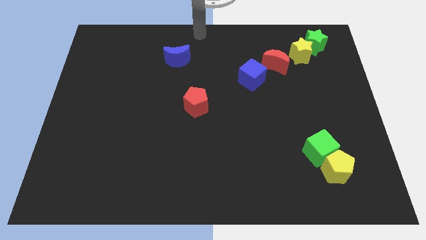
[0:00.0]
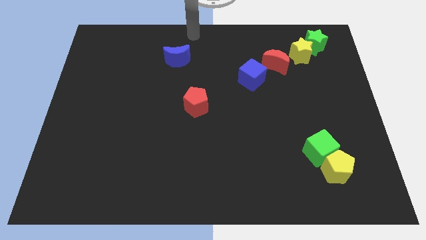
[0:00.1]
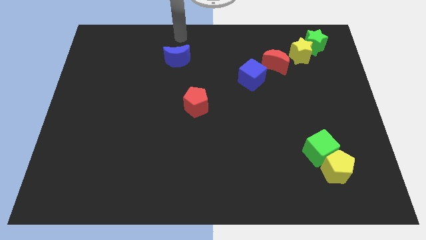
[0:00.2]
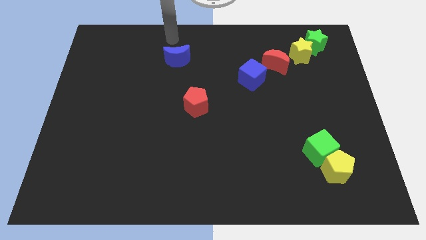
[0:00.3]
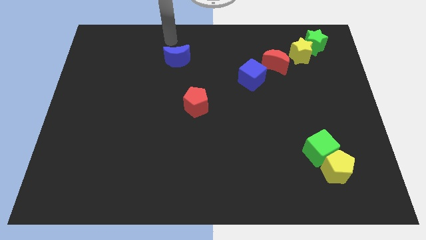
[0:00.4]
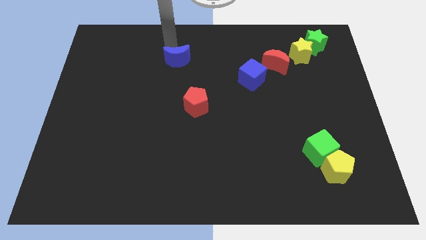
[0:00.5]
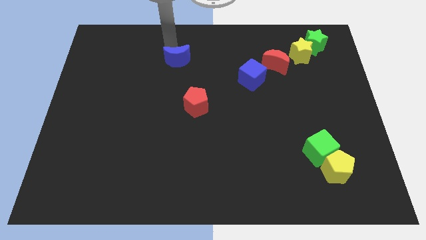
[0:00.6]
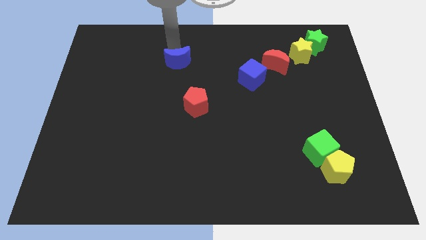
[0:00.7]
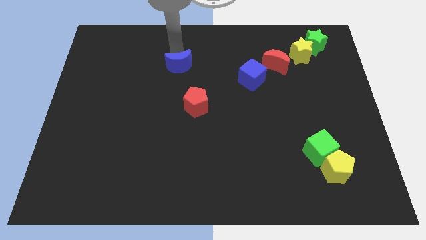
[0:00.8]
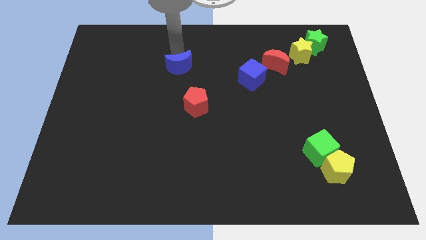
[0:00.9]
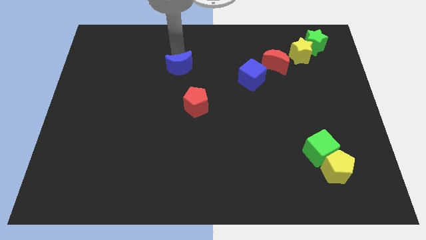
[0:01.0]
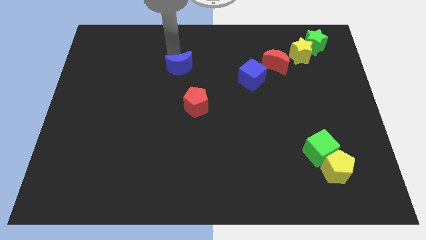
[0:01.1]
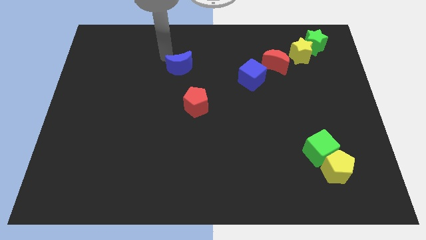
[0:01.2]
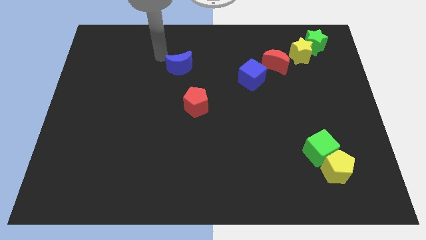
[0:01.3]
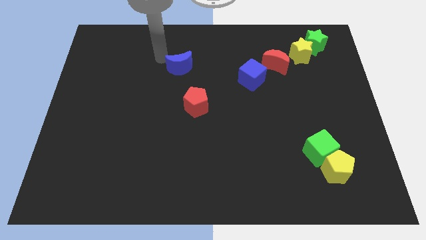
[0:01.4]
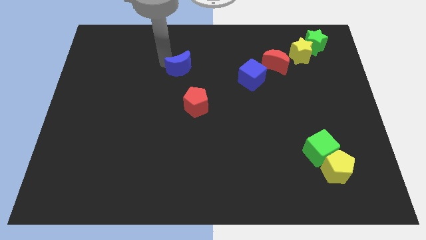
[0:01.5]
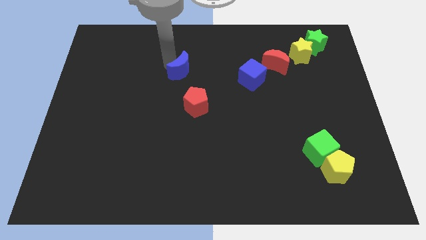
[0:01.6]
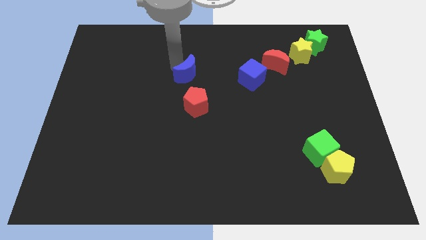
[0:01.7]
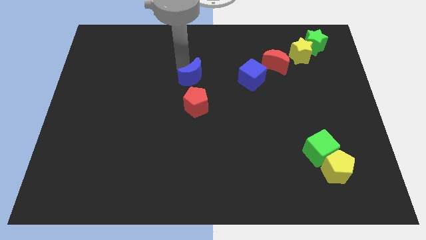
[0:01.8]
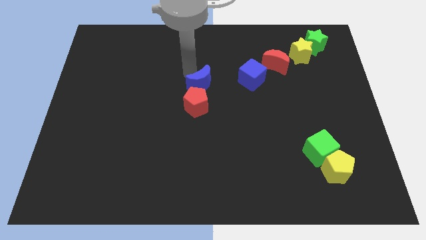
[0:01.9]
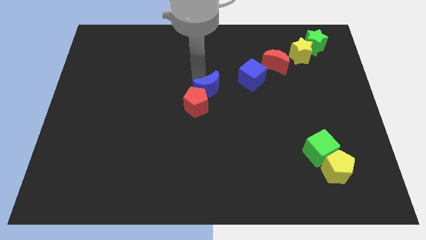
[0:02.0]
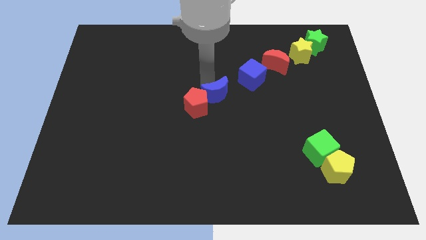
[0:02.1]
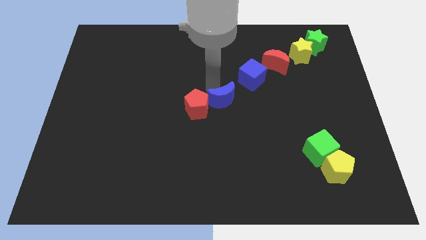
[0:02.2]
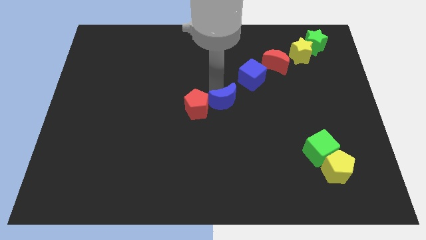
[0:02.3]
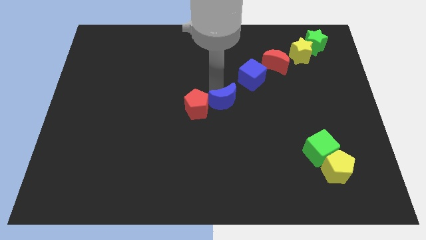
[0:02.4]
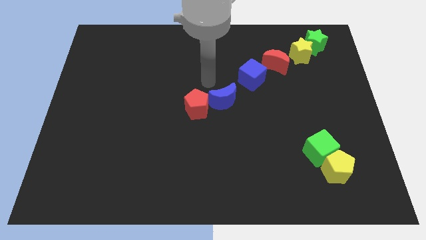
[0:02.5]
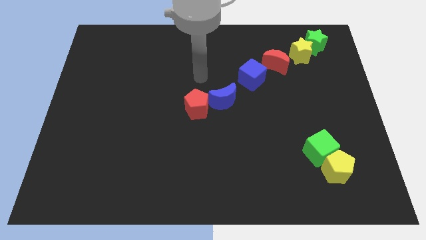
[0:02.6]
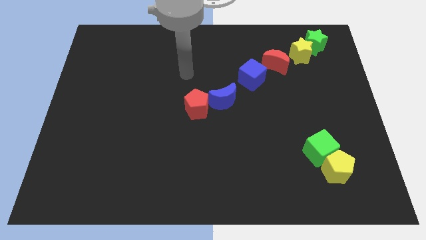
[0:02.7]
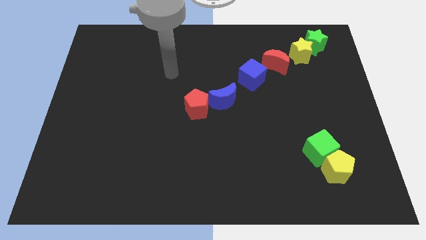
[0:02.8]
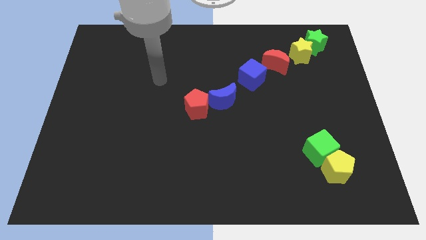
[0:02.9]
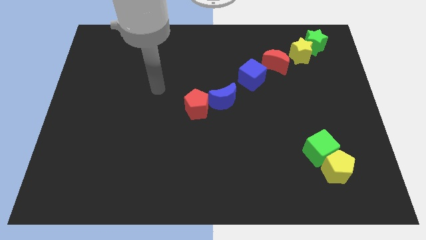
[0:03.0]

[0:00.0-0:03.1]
place blue moon to the right of red pentagon

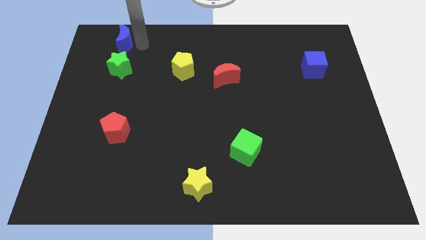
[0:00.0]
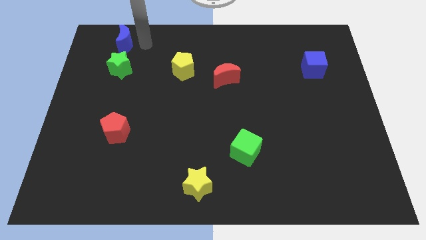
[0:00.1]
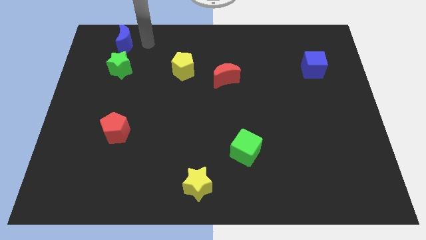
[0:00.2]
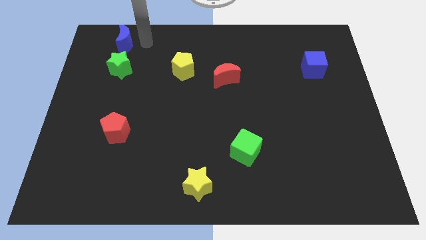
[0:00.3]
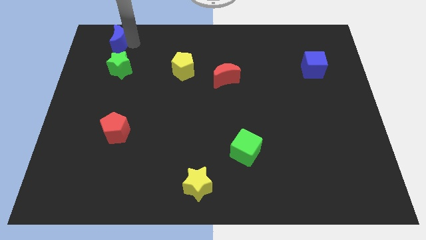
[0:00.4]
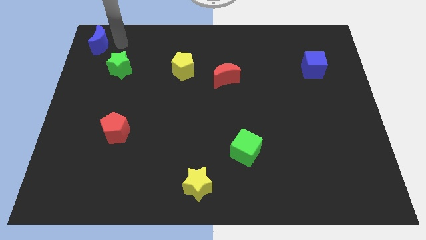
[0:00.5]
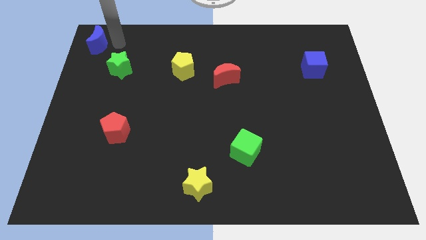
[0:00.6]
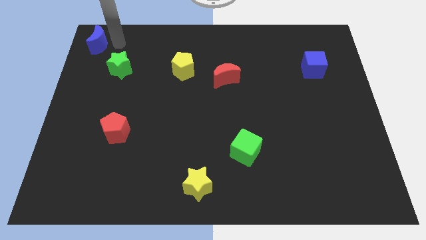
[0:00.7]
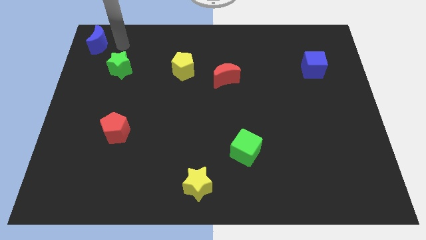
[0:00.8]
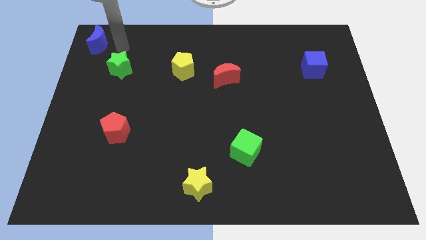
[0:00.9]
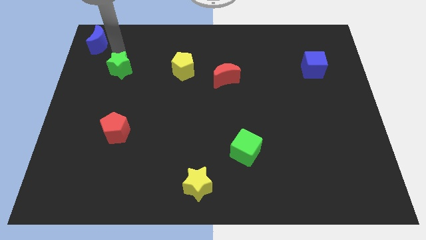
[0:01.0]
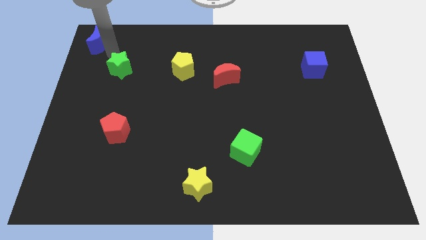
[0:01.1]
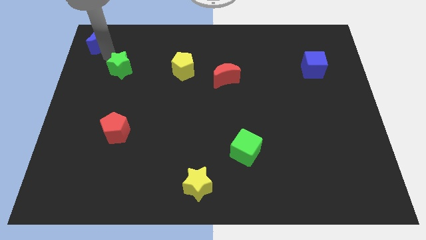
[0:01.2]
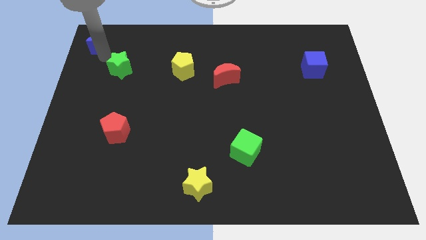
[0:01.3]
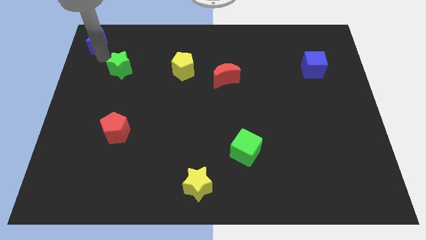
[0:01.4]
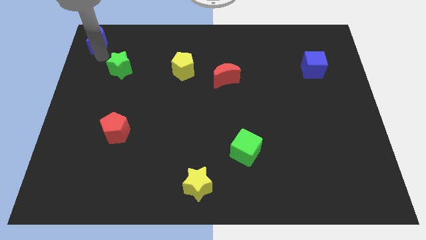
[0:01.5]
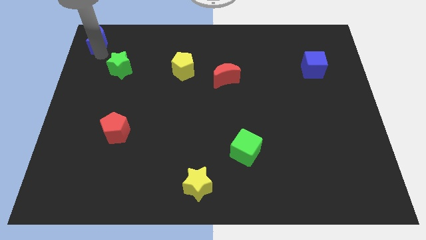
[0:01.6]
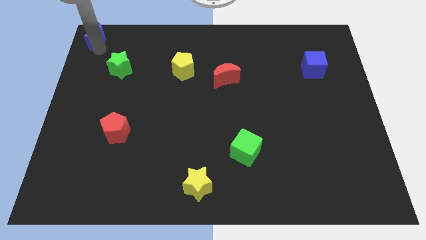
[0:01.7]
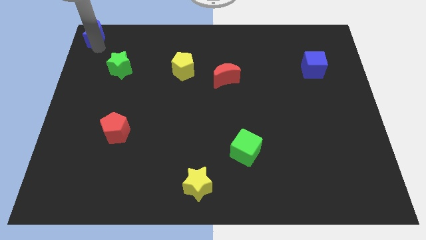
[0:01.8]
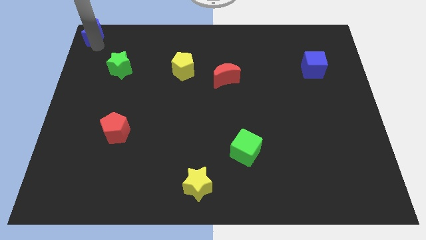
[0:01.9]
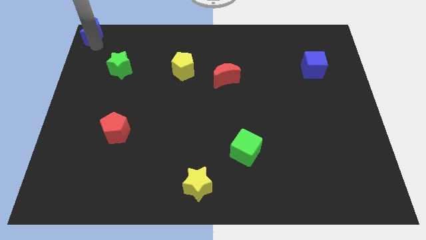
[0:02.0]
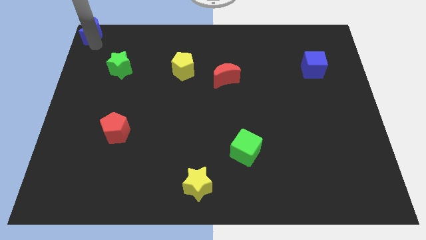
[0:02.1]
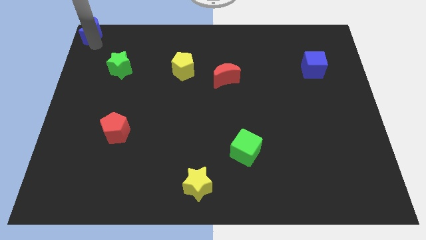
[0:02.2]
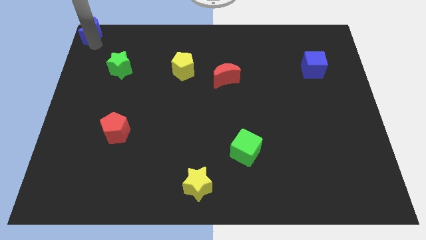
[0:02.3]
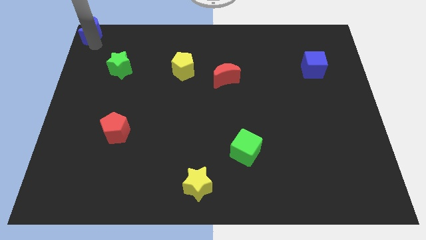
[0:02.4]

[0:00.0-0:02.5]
move the blue crescent to the top left corner of the board

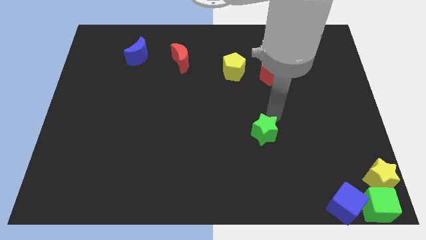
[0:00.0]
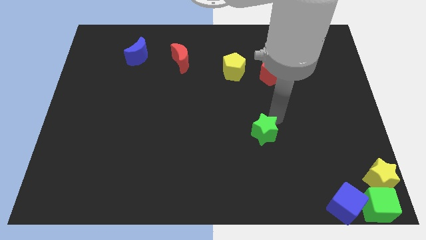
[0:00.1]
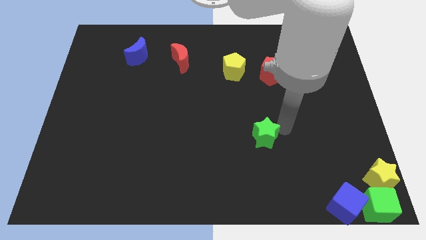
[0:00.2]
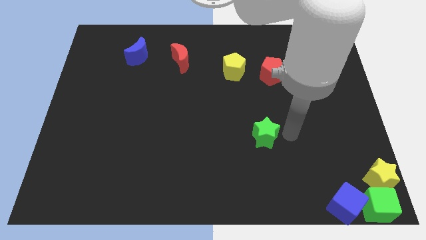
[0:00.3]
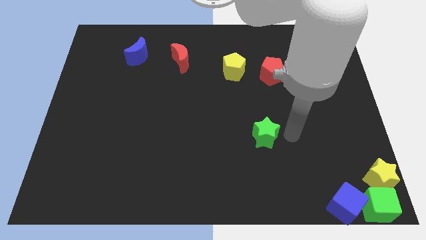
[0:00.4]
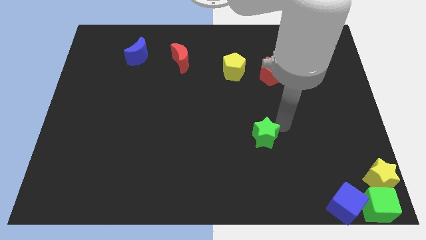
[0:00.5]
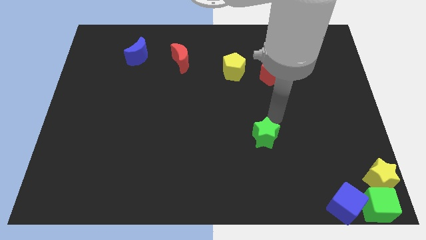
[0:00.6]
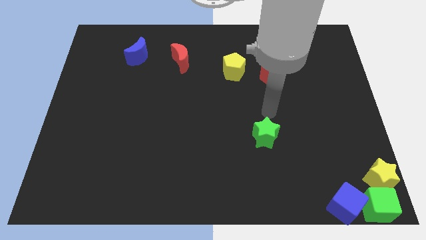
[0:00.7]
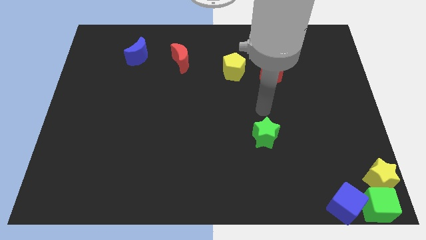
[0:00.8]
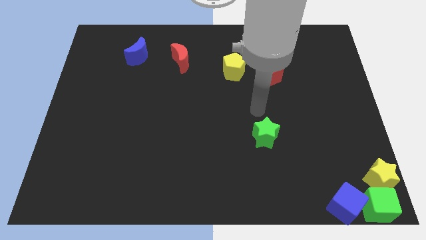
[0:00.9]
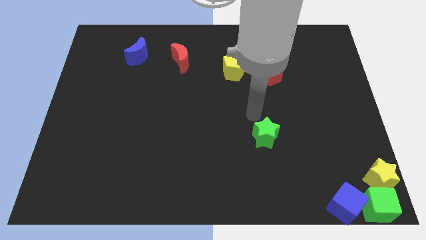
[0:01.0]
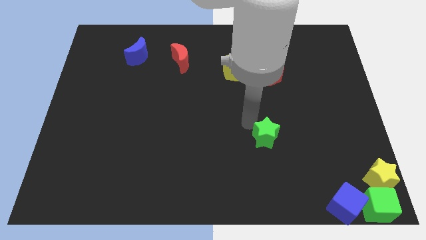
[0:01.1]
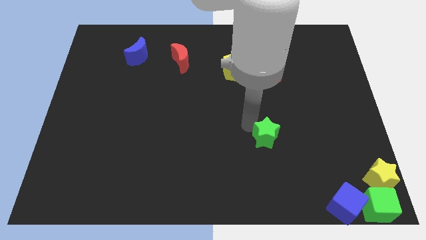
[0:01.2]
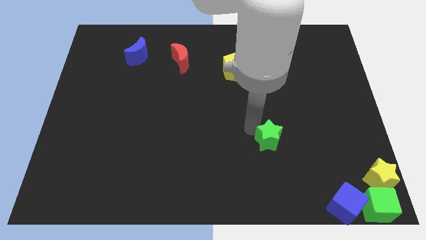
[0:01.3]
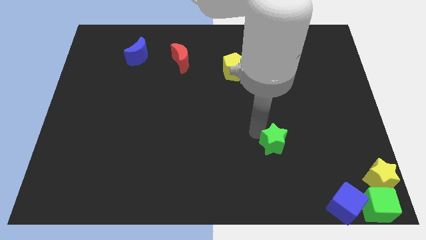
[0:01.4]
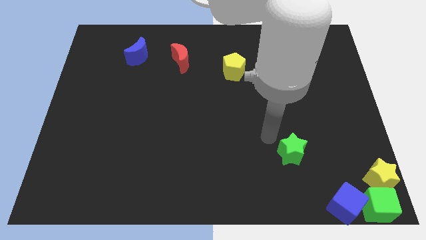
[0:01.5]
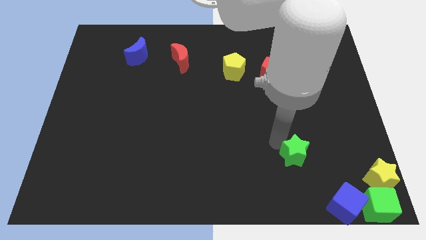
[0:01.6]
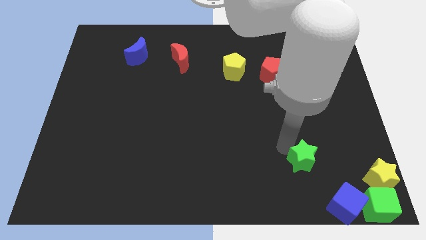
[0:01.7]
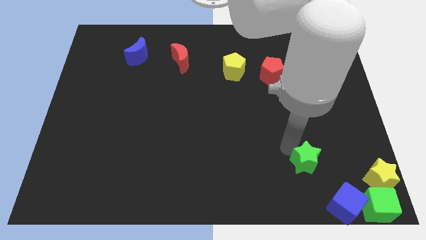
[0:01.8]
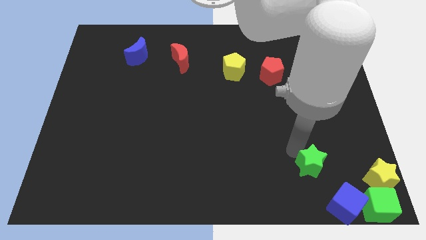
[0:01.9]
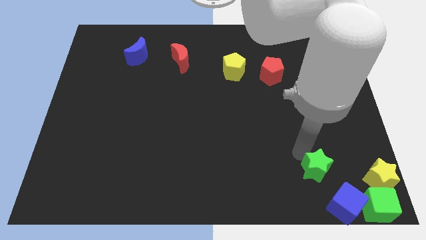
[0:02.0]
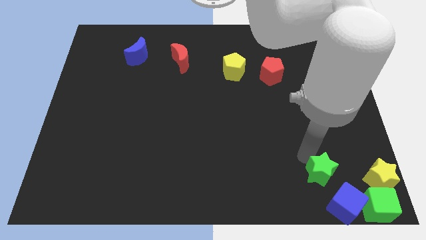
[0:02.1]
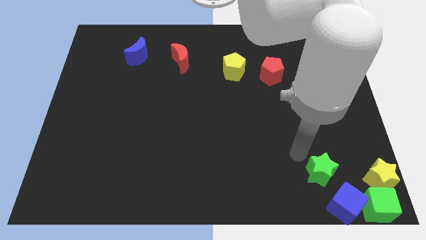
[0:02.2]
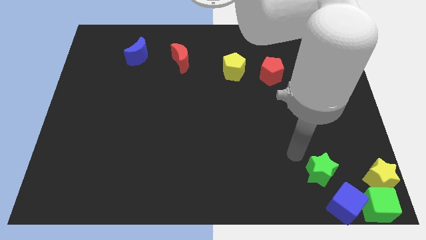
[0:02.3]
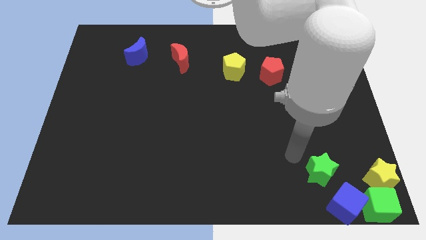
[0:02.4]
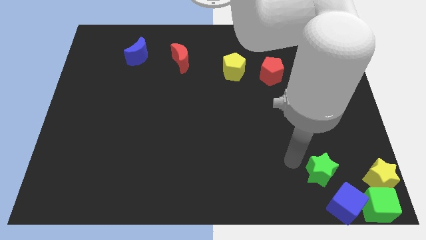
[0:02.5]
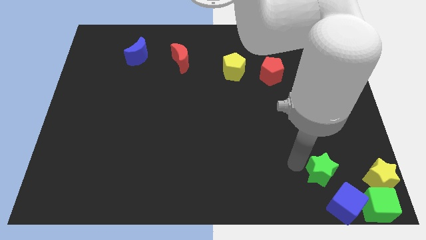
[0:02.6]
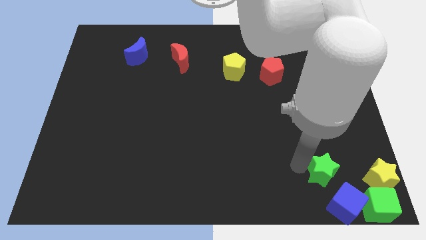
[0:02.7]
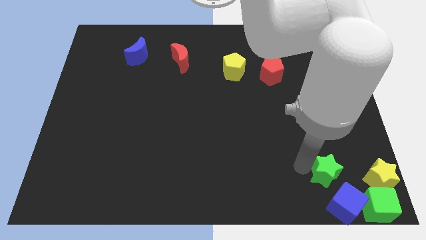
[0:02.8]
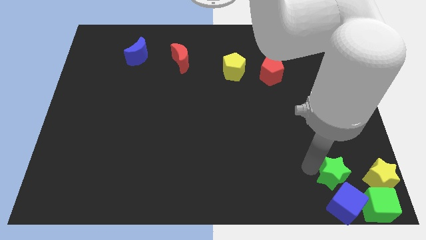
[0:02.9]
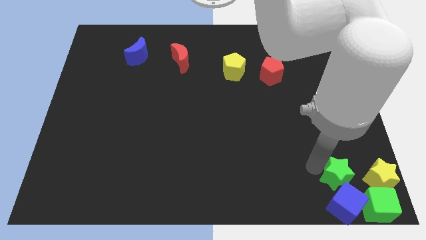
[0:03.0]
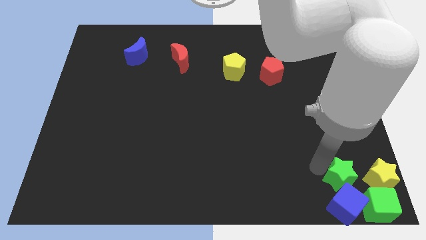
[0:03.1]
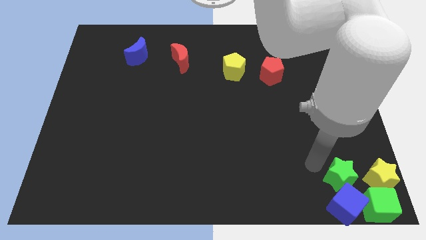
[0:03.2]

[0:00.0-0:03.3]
push the green star into the top side of the blue cube

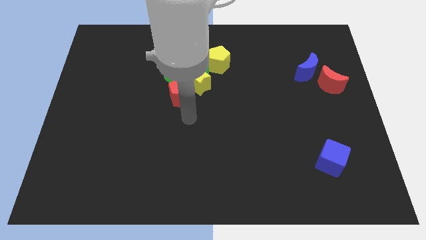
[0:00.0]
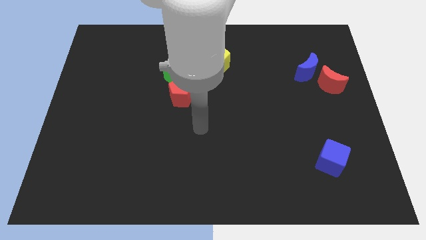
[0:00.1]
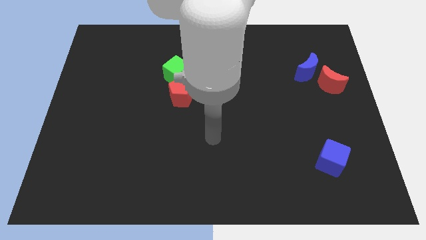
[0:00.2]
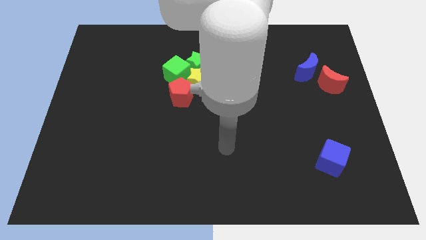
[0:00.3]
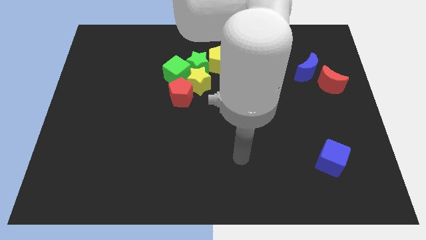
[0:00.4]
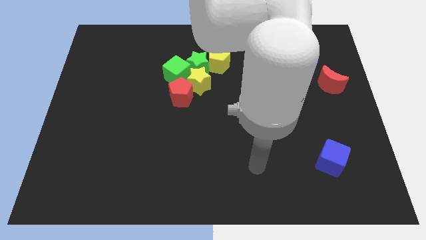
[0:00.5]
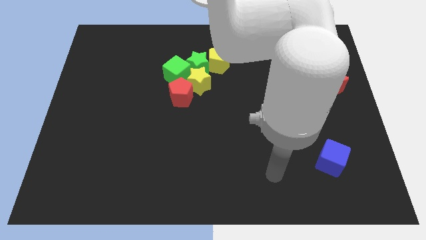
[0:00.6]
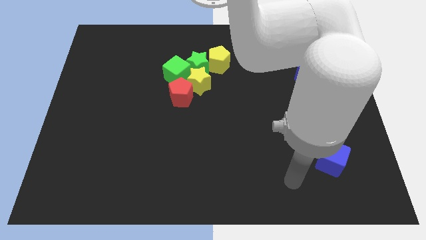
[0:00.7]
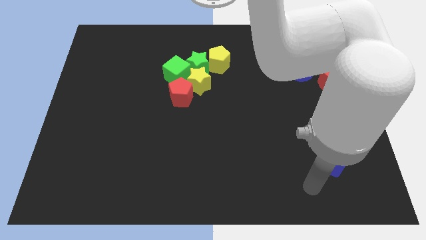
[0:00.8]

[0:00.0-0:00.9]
move your arm to the bottom of the blue cube
